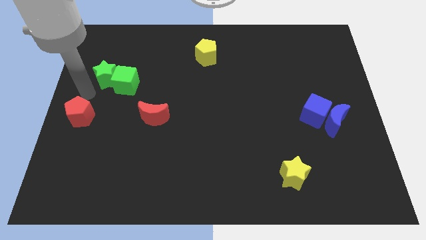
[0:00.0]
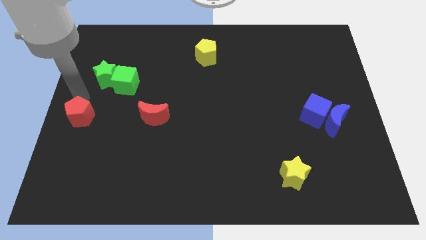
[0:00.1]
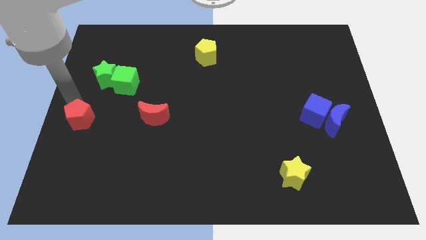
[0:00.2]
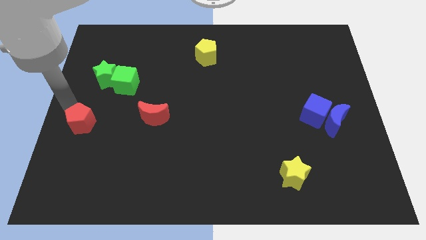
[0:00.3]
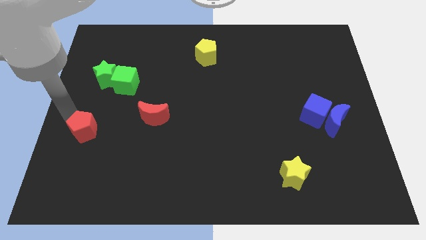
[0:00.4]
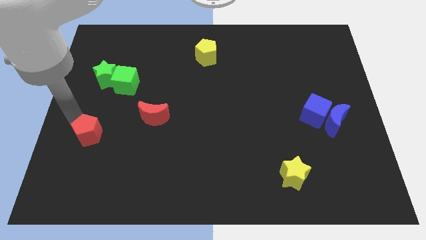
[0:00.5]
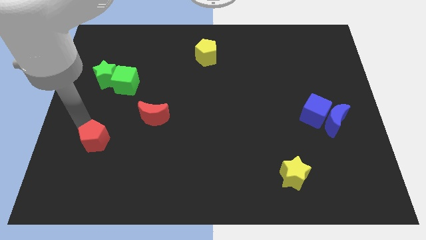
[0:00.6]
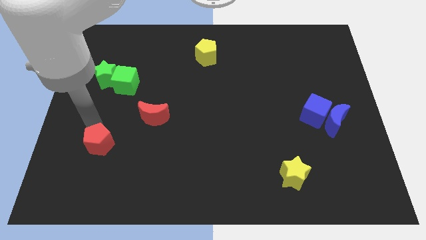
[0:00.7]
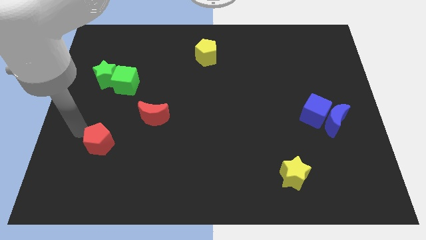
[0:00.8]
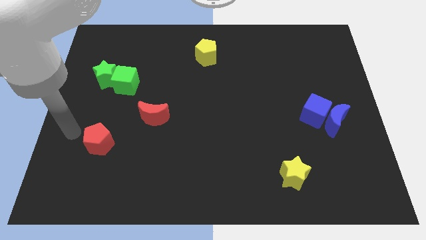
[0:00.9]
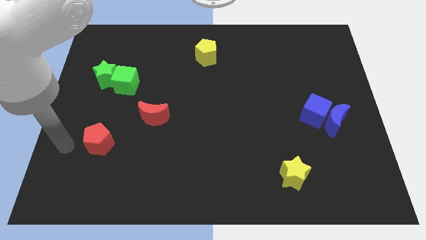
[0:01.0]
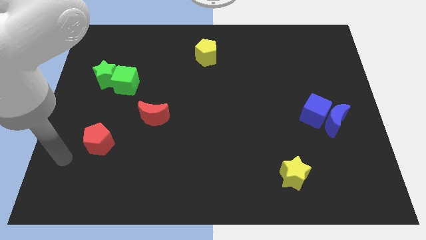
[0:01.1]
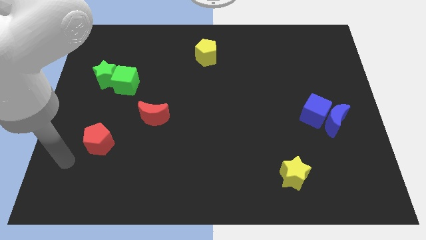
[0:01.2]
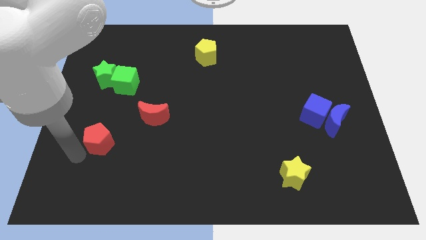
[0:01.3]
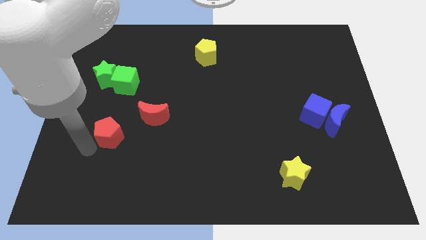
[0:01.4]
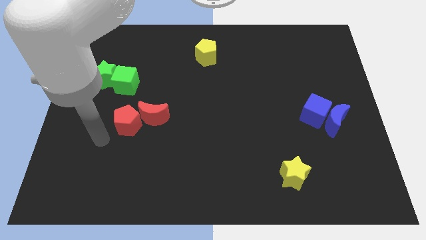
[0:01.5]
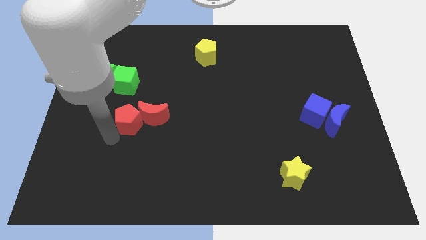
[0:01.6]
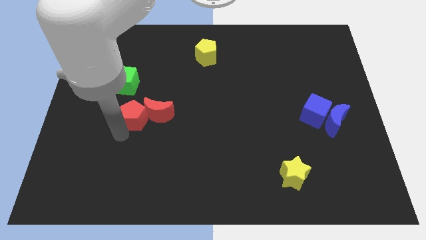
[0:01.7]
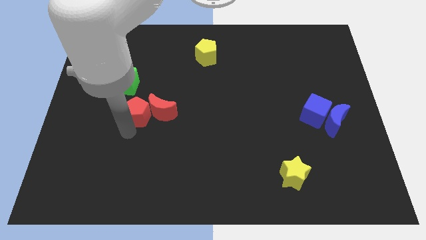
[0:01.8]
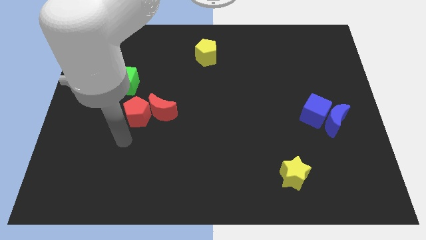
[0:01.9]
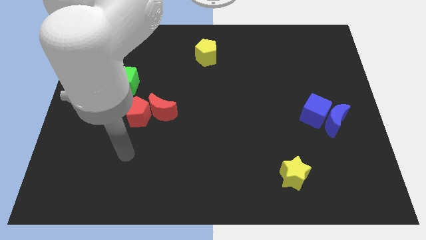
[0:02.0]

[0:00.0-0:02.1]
place the red pentagon close to the red crescent

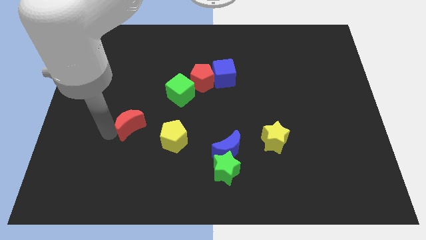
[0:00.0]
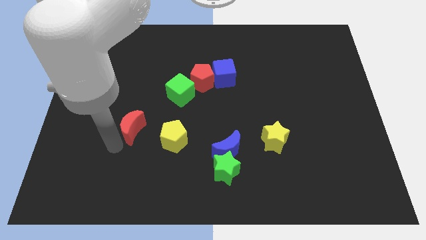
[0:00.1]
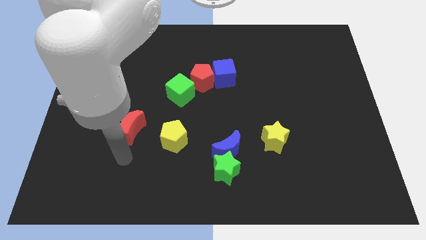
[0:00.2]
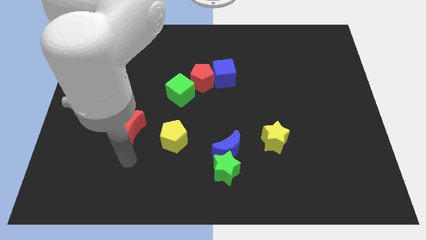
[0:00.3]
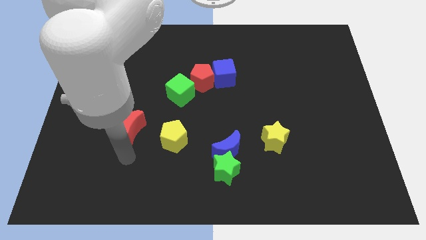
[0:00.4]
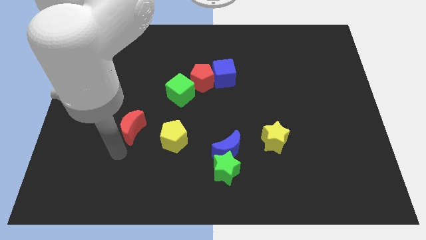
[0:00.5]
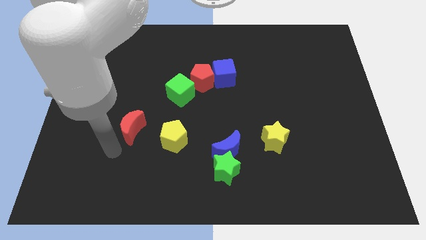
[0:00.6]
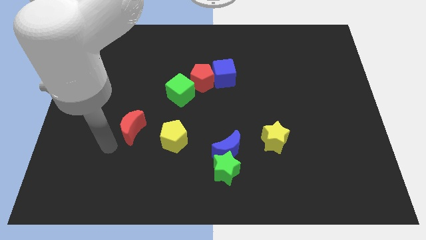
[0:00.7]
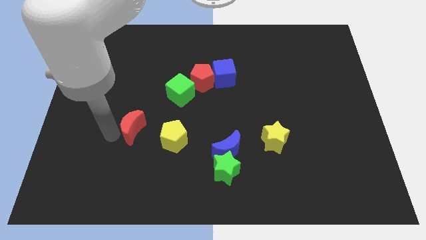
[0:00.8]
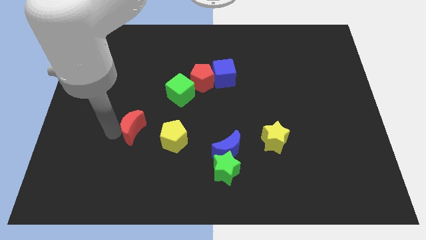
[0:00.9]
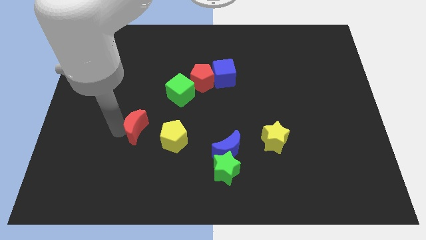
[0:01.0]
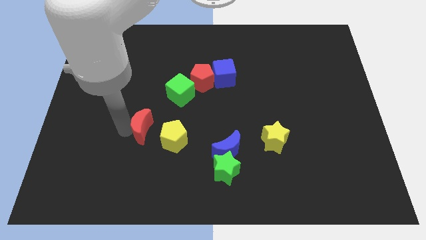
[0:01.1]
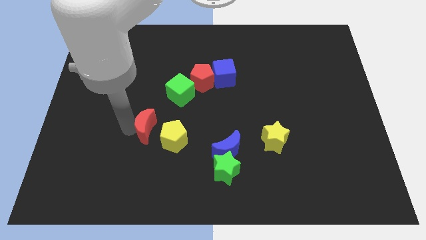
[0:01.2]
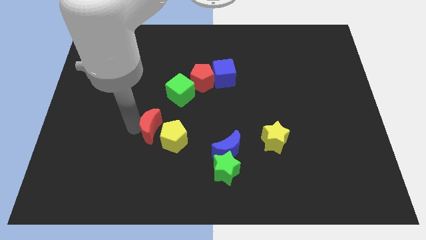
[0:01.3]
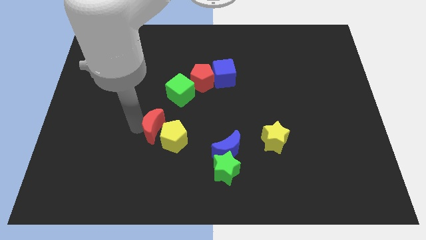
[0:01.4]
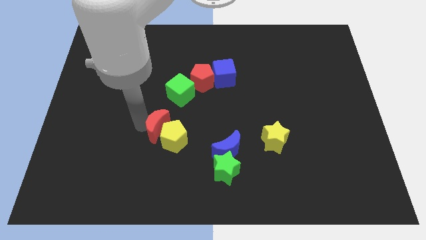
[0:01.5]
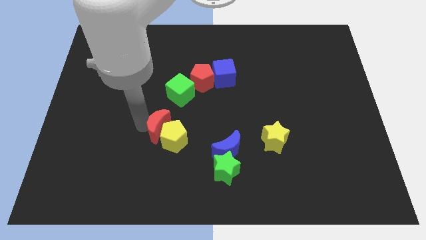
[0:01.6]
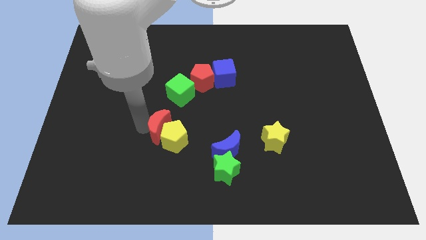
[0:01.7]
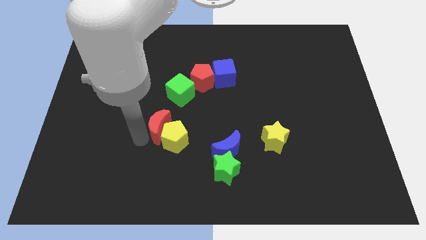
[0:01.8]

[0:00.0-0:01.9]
move the red crescent towards into the yellow pentagon

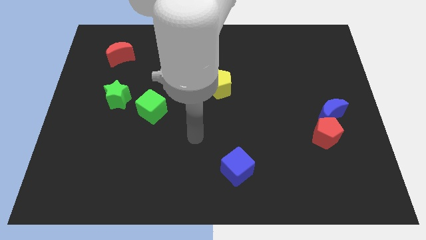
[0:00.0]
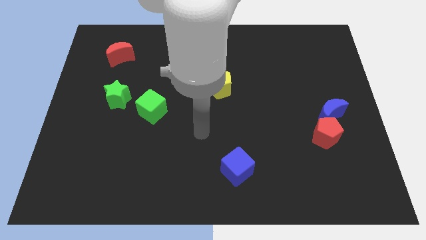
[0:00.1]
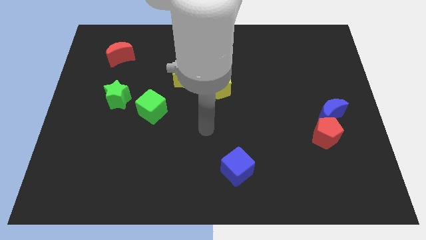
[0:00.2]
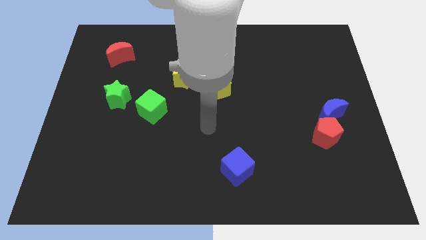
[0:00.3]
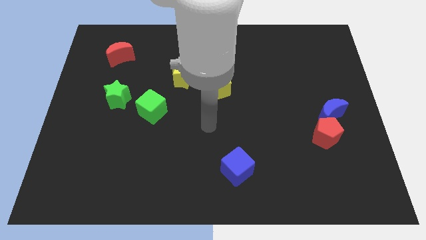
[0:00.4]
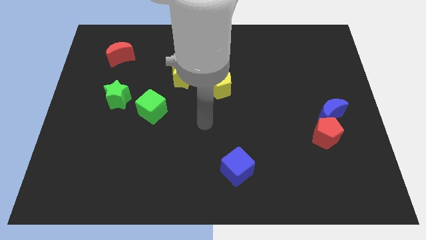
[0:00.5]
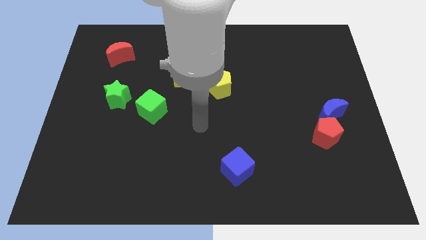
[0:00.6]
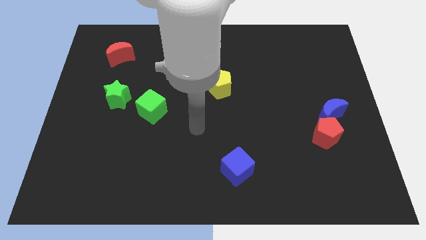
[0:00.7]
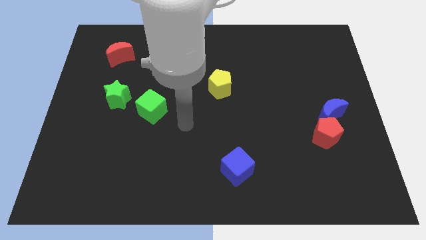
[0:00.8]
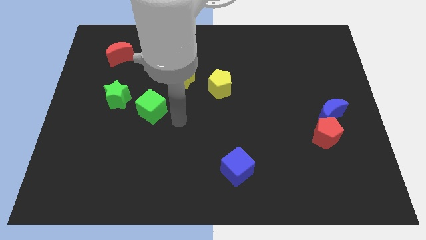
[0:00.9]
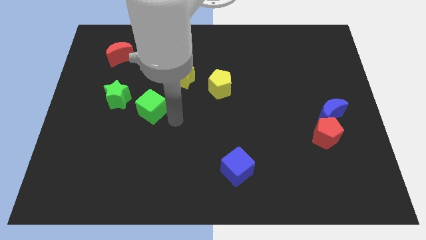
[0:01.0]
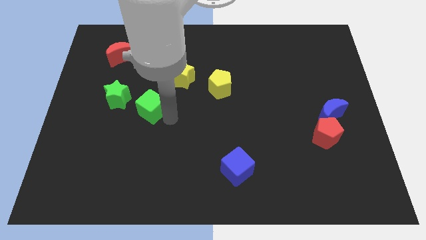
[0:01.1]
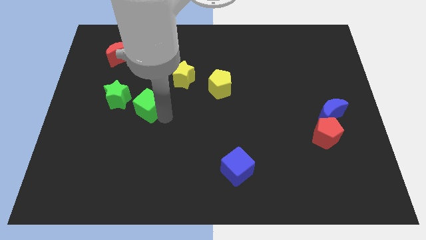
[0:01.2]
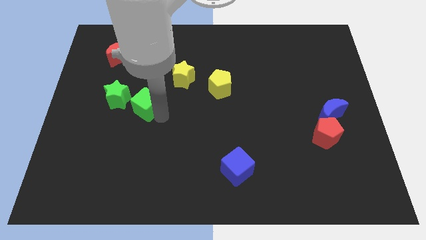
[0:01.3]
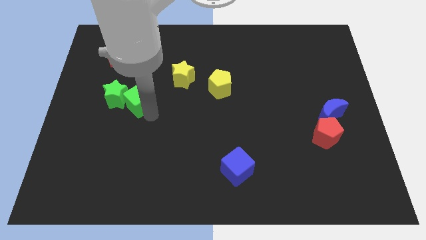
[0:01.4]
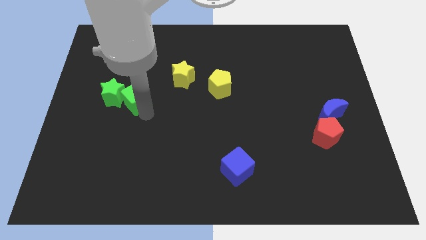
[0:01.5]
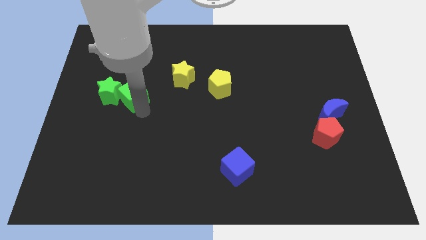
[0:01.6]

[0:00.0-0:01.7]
push the green cube into the green star

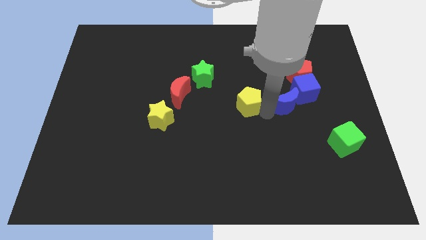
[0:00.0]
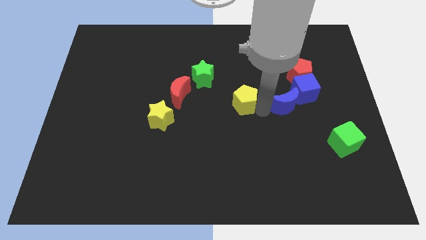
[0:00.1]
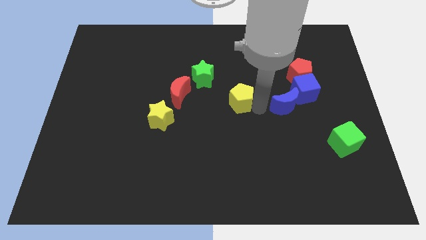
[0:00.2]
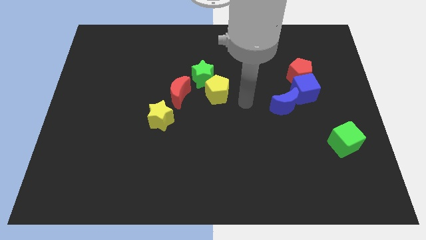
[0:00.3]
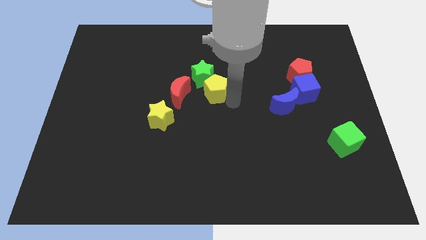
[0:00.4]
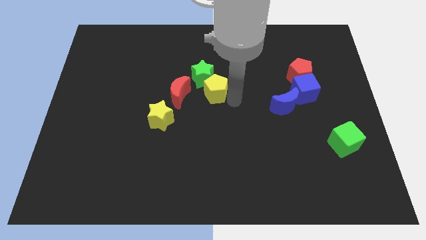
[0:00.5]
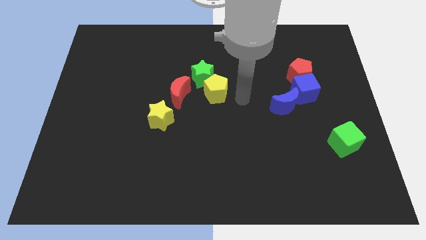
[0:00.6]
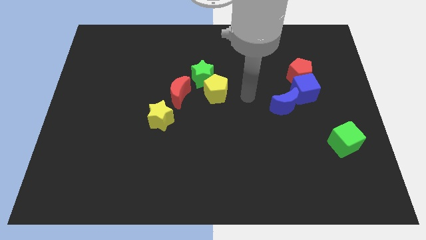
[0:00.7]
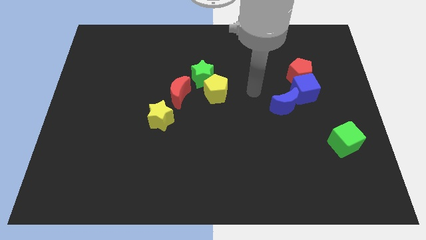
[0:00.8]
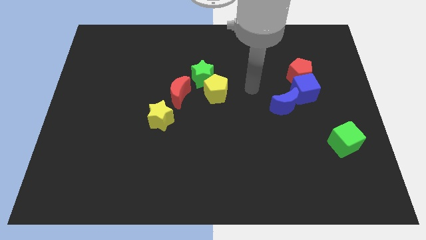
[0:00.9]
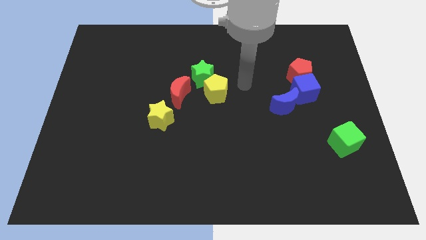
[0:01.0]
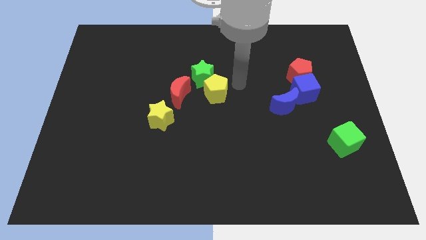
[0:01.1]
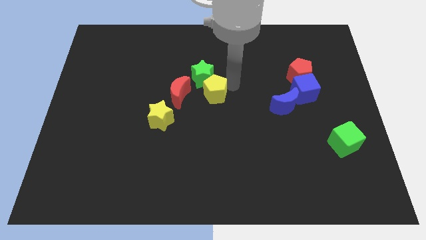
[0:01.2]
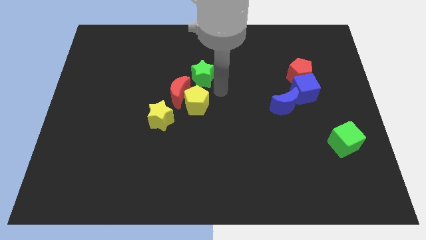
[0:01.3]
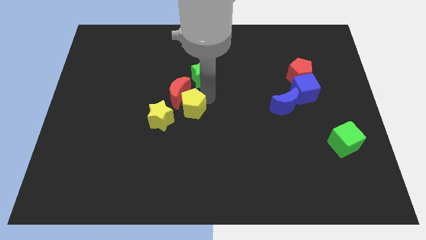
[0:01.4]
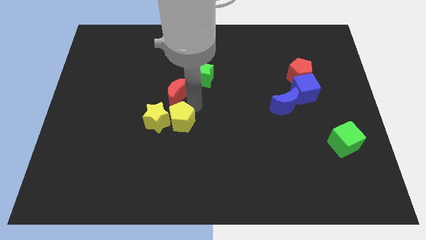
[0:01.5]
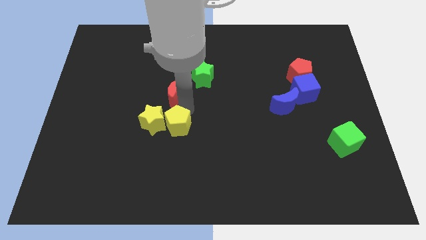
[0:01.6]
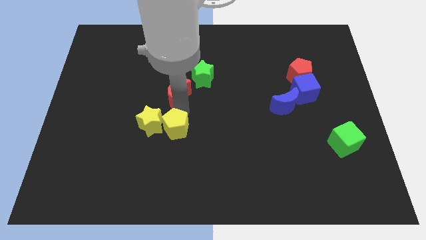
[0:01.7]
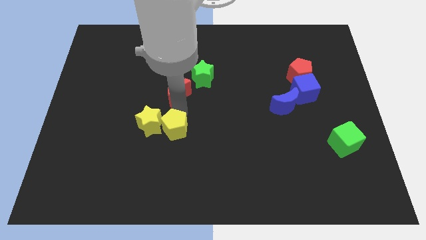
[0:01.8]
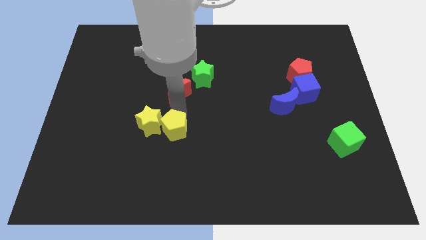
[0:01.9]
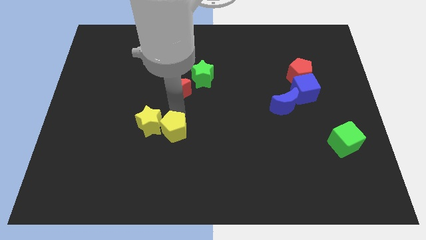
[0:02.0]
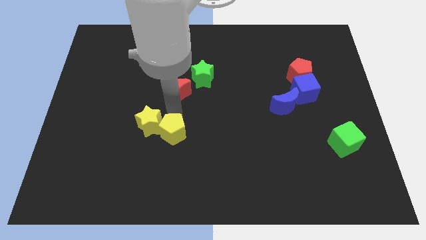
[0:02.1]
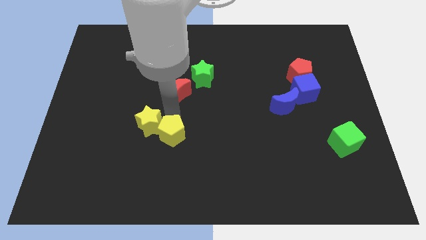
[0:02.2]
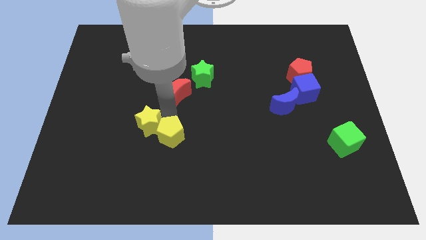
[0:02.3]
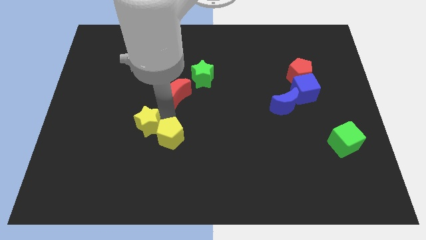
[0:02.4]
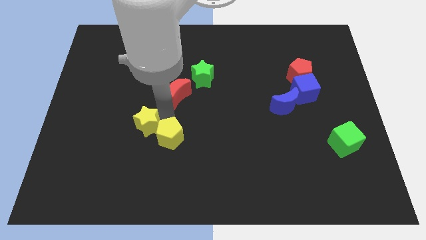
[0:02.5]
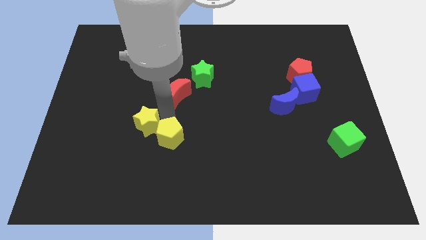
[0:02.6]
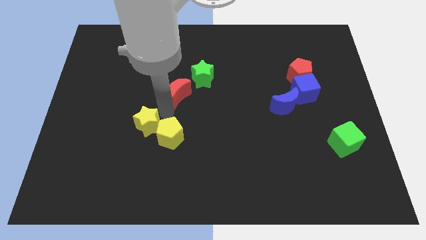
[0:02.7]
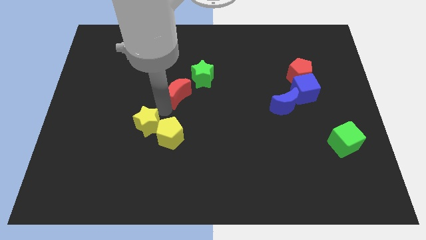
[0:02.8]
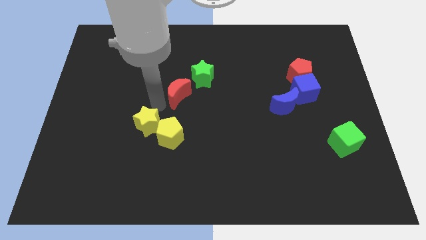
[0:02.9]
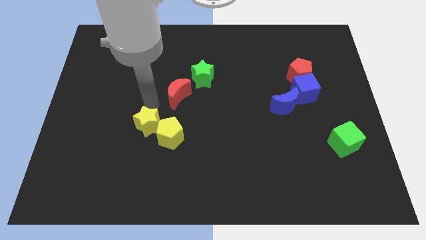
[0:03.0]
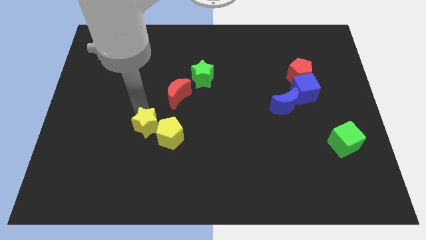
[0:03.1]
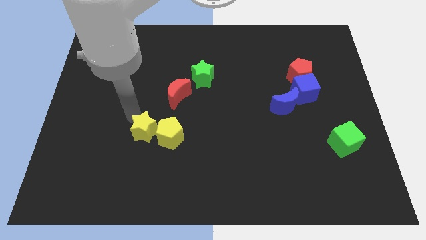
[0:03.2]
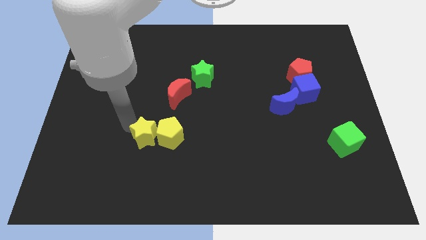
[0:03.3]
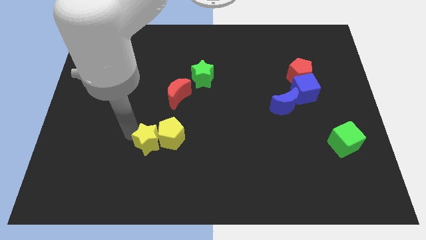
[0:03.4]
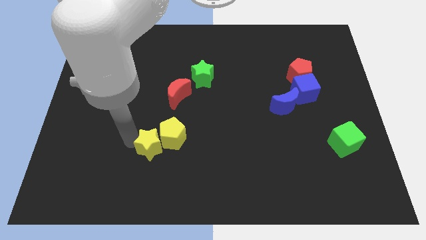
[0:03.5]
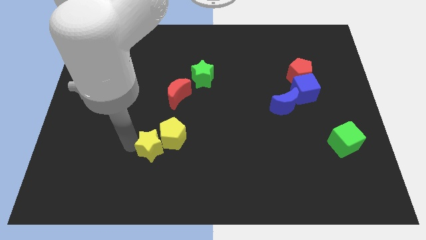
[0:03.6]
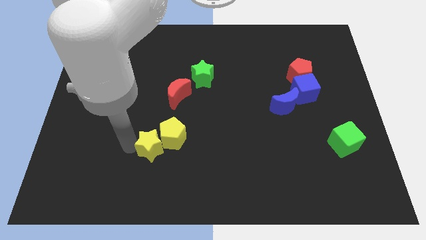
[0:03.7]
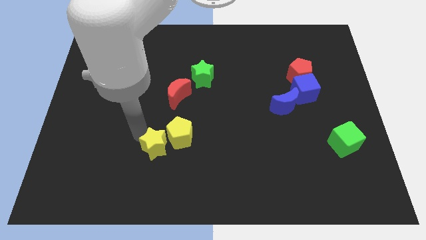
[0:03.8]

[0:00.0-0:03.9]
place the yellow pentagon below the red crescent
